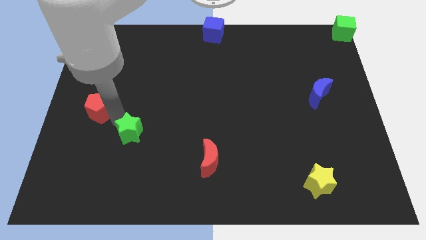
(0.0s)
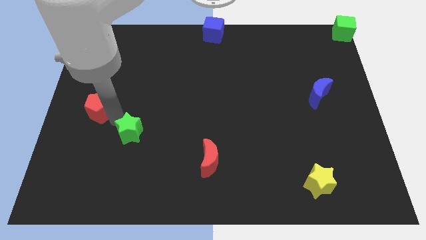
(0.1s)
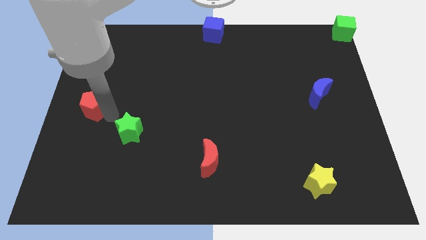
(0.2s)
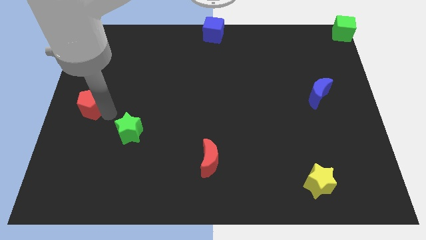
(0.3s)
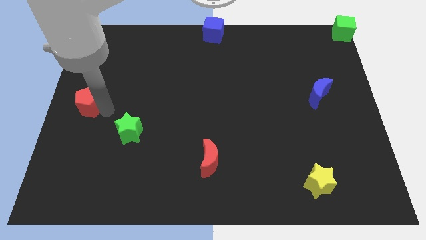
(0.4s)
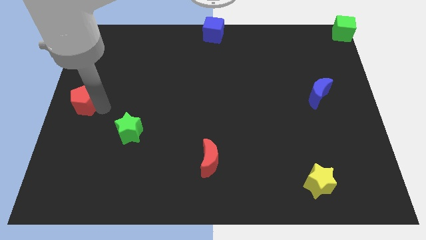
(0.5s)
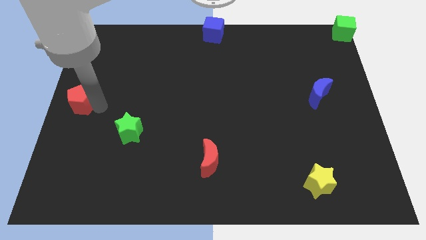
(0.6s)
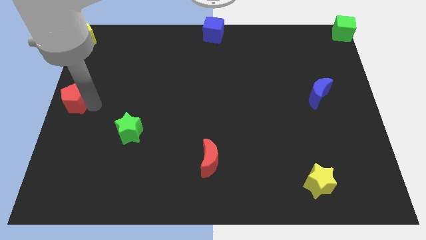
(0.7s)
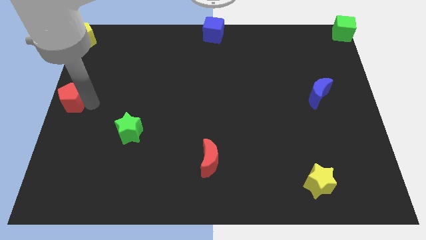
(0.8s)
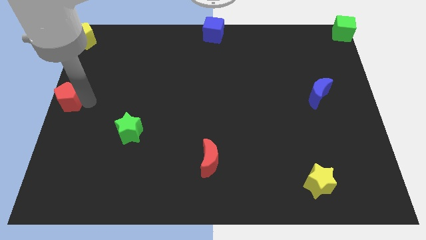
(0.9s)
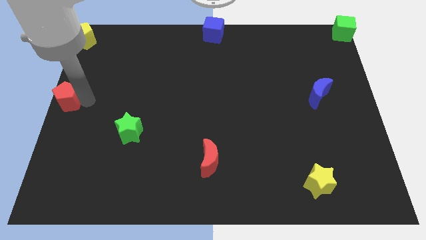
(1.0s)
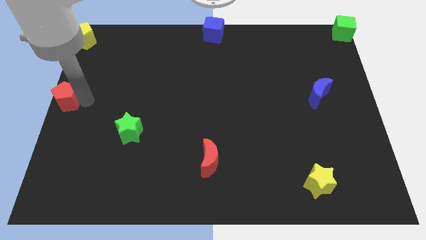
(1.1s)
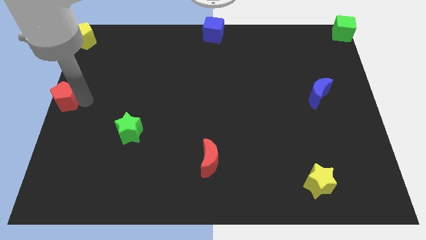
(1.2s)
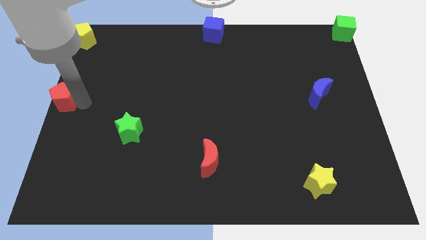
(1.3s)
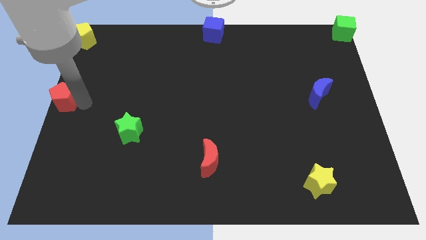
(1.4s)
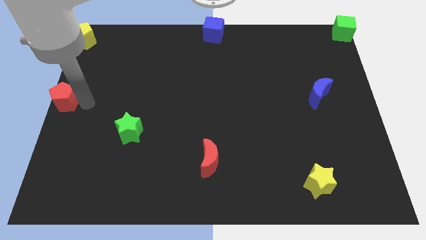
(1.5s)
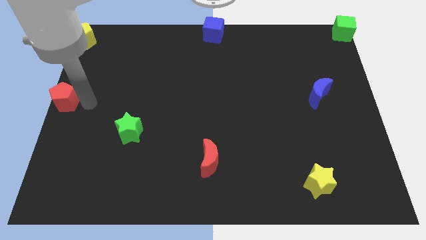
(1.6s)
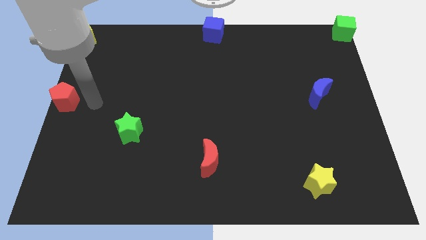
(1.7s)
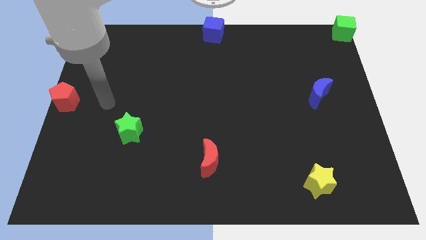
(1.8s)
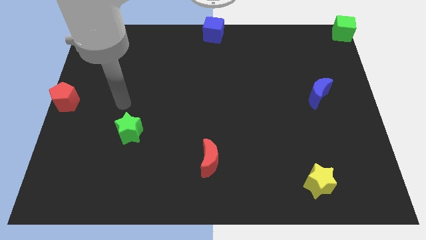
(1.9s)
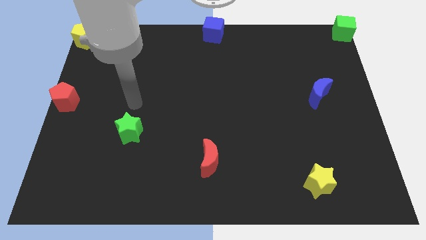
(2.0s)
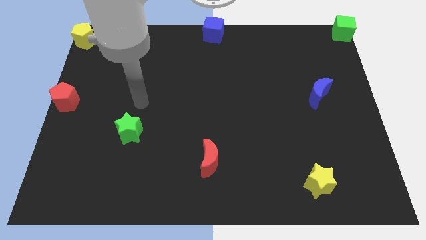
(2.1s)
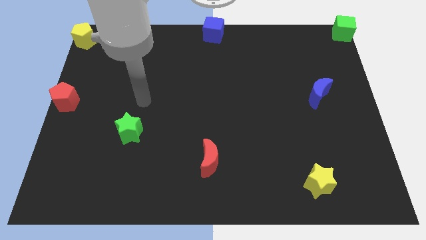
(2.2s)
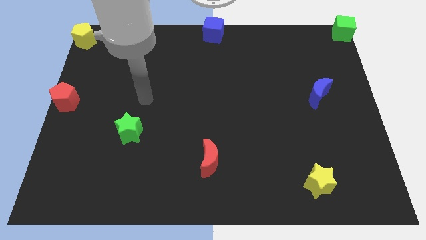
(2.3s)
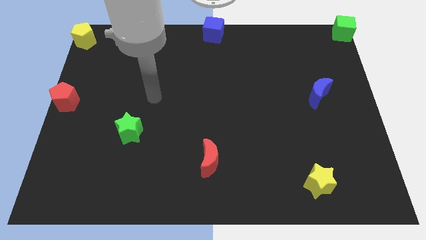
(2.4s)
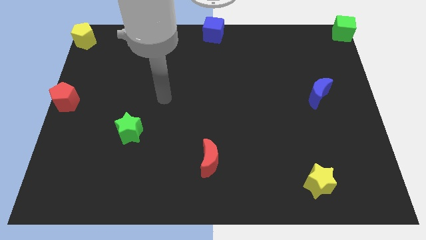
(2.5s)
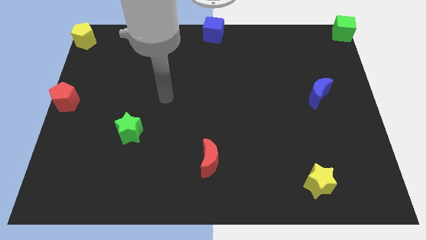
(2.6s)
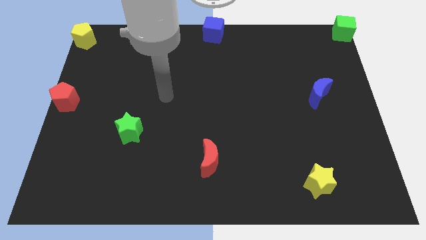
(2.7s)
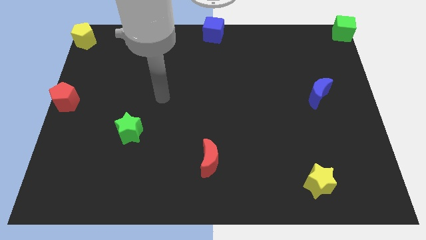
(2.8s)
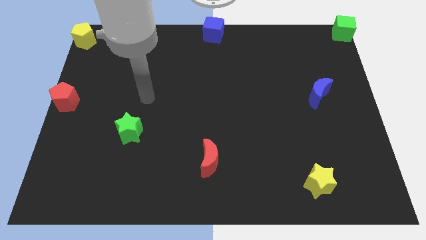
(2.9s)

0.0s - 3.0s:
push the red pentagon at the center left of the board

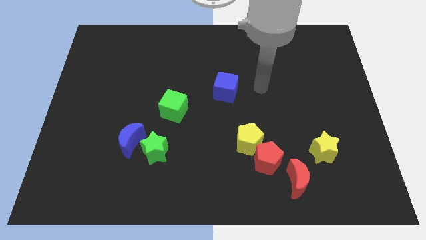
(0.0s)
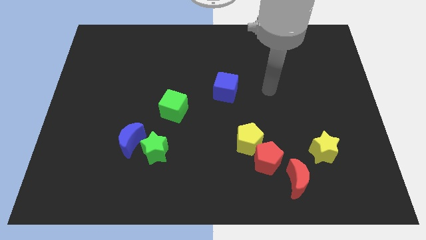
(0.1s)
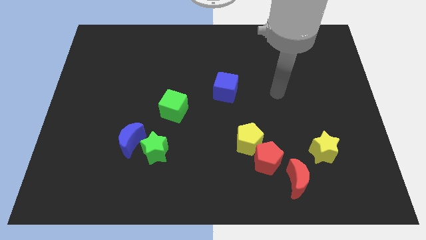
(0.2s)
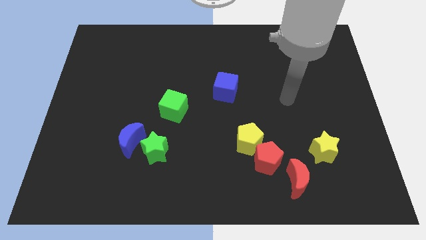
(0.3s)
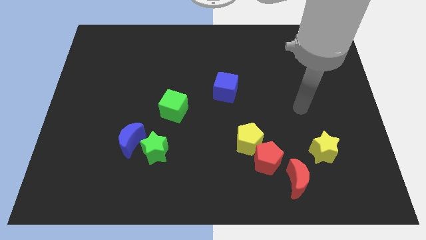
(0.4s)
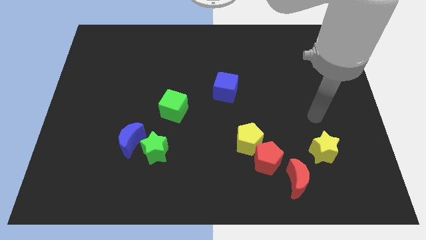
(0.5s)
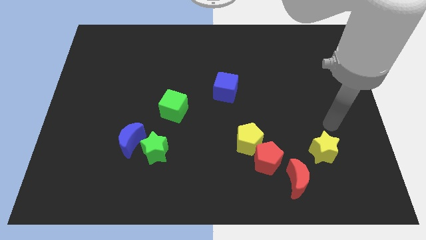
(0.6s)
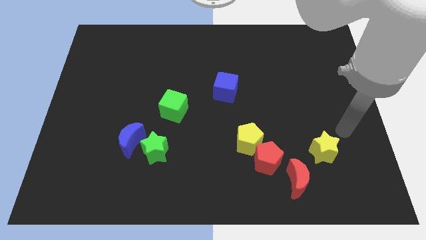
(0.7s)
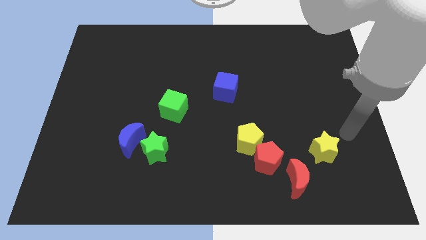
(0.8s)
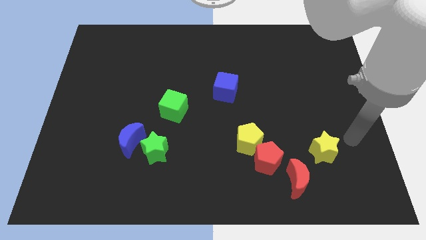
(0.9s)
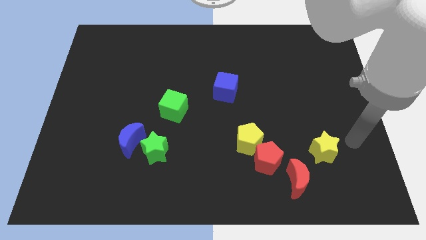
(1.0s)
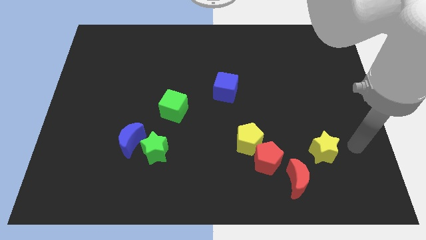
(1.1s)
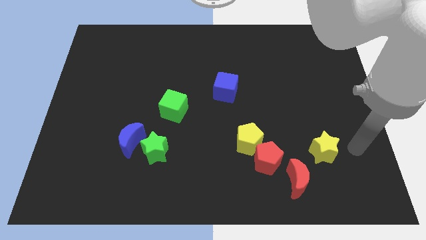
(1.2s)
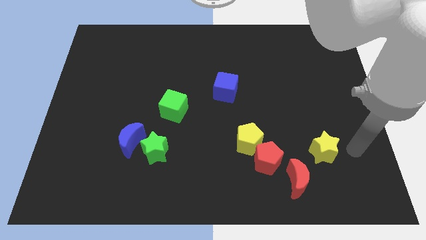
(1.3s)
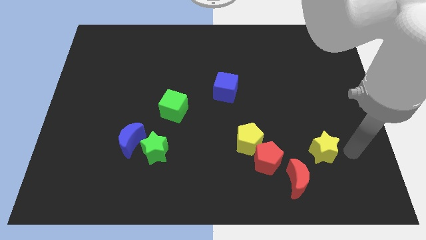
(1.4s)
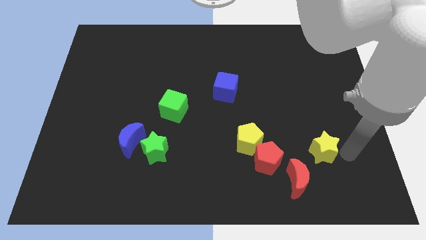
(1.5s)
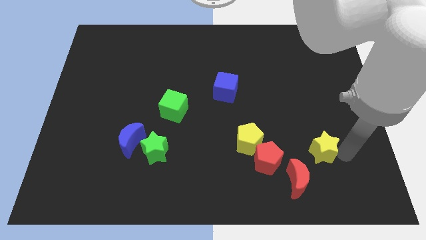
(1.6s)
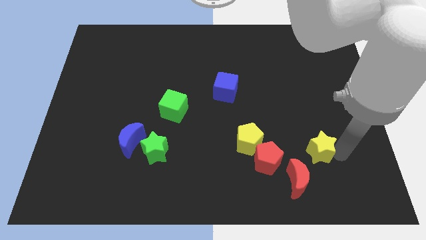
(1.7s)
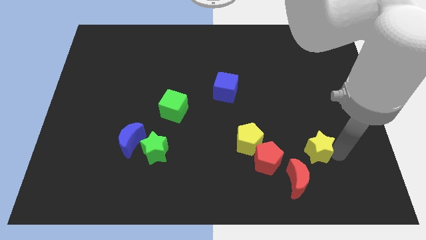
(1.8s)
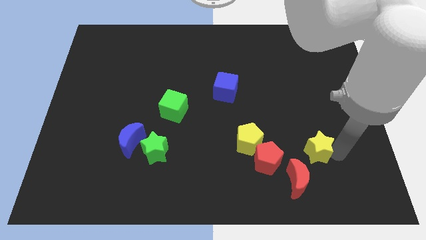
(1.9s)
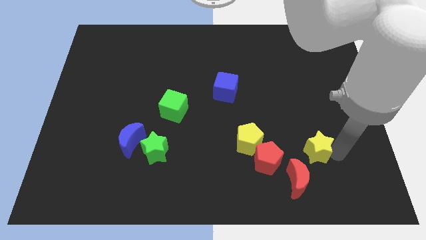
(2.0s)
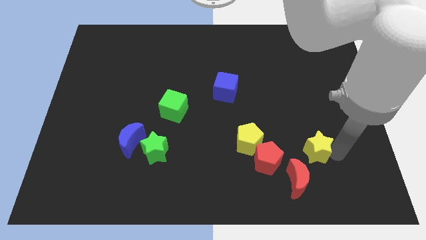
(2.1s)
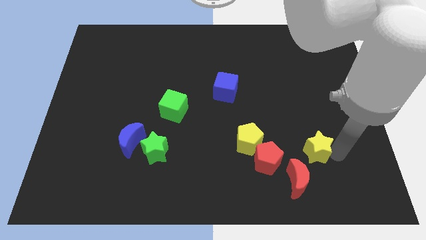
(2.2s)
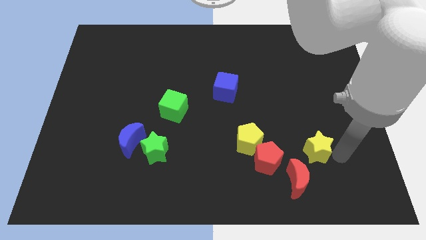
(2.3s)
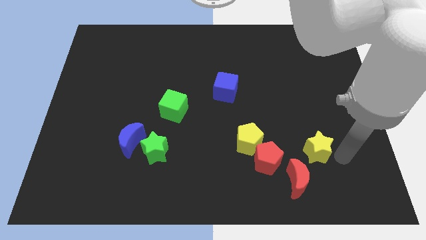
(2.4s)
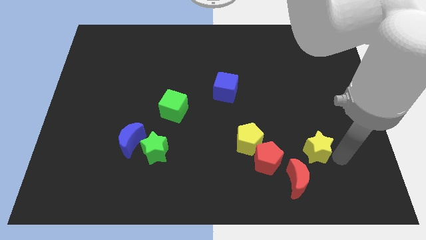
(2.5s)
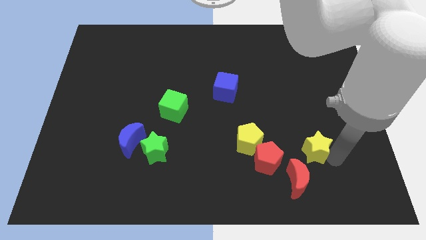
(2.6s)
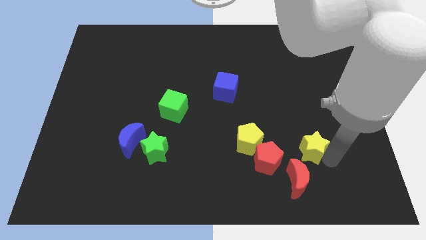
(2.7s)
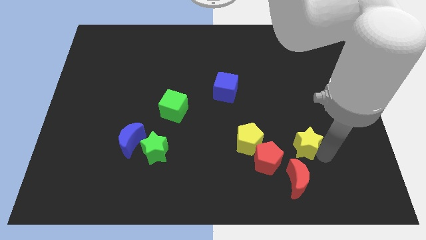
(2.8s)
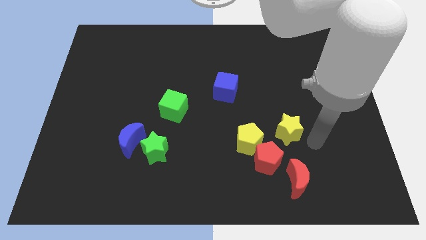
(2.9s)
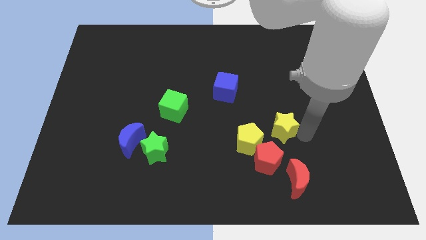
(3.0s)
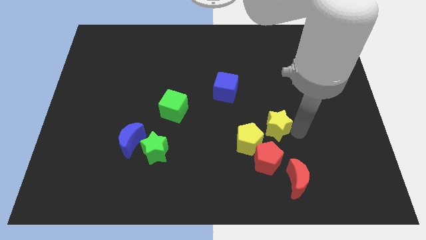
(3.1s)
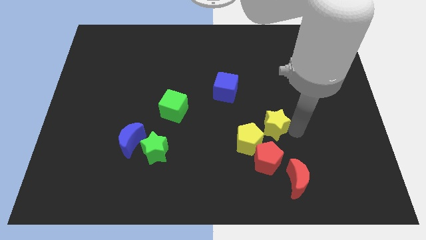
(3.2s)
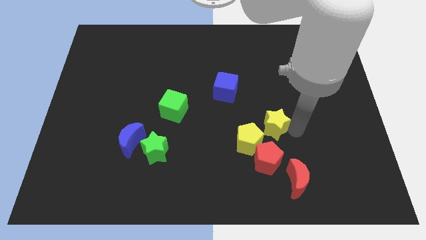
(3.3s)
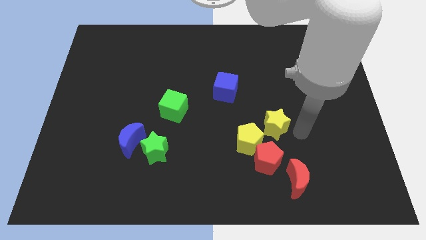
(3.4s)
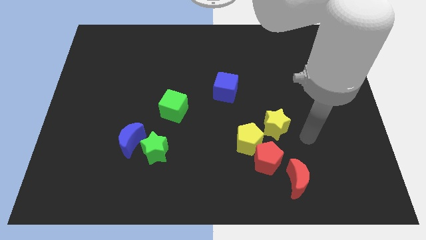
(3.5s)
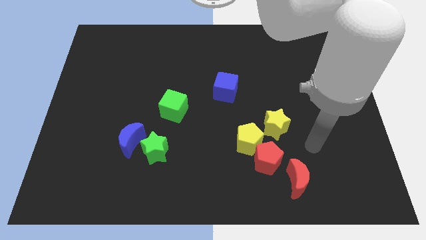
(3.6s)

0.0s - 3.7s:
push yellow star to the top of red pentagon

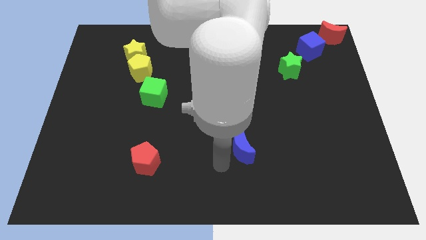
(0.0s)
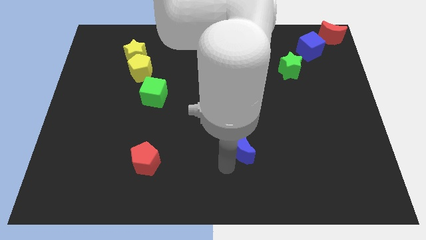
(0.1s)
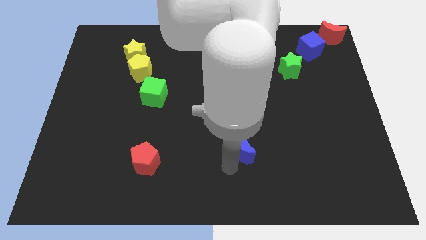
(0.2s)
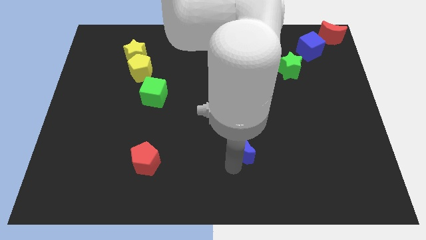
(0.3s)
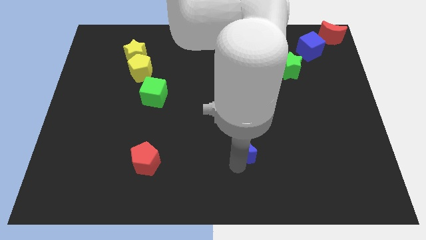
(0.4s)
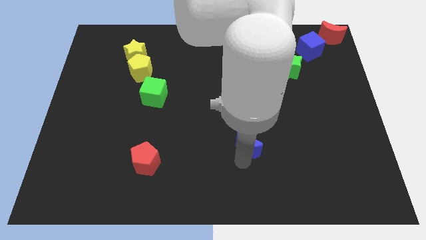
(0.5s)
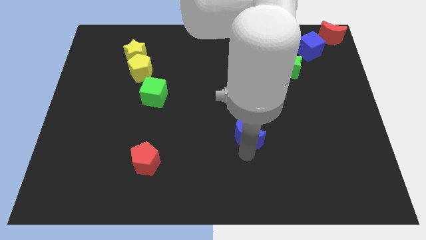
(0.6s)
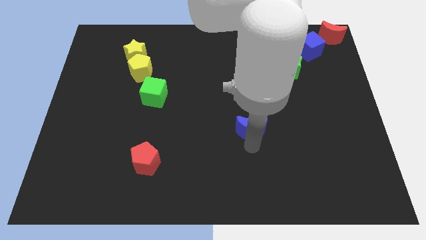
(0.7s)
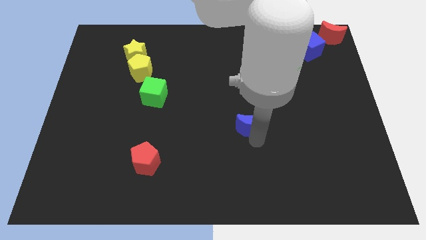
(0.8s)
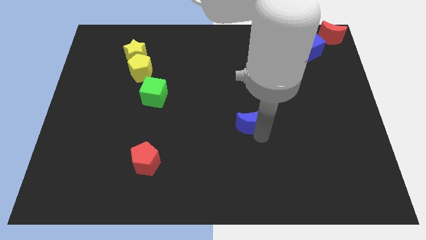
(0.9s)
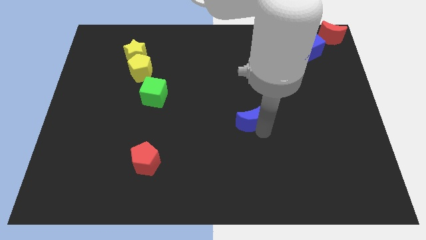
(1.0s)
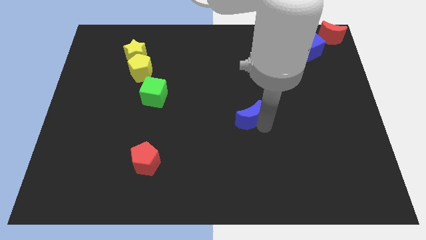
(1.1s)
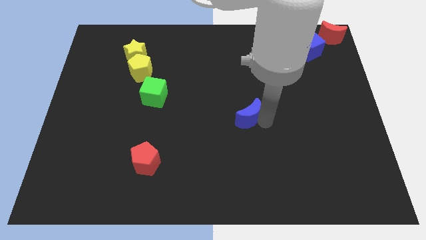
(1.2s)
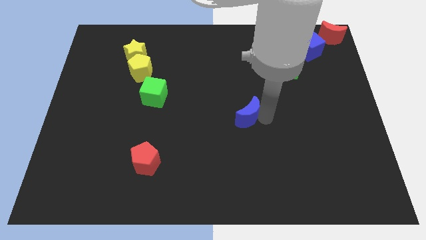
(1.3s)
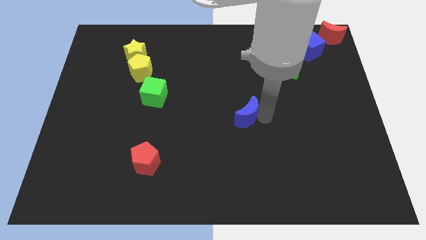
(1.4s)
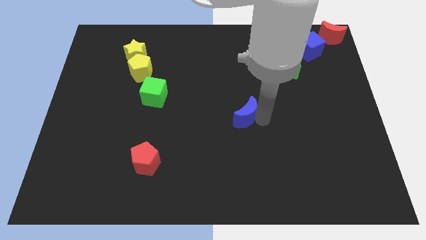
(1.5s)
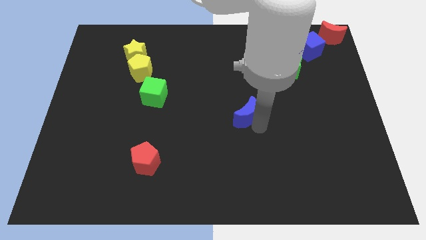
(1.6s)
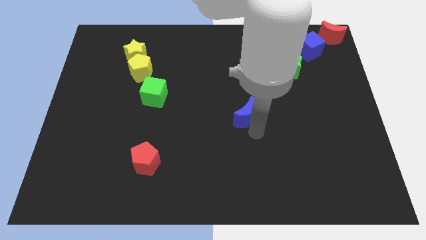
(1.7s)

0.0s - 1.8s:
push the blue crescent towards the center of the board

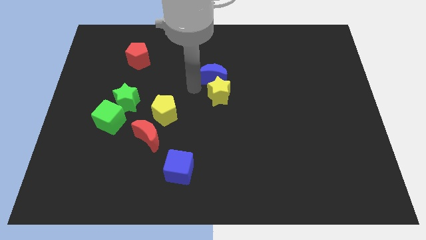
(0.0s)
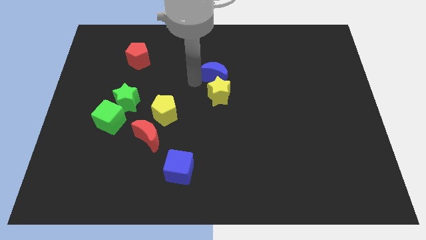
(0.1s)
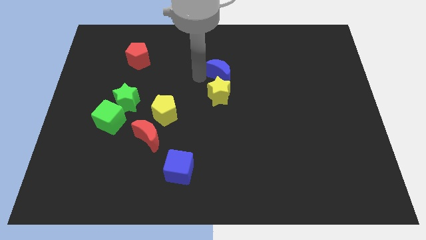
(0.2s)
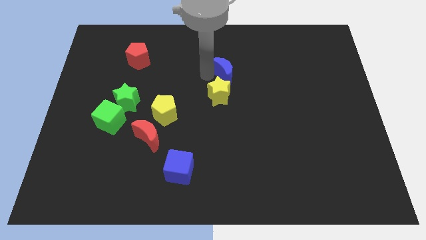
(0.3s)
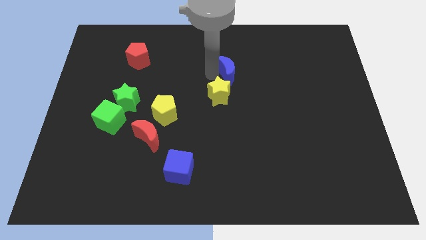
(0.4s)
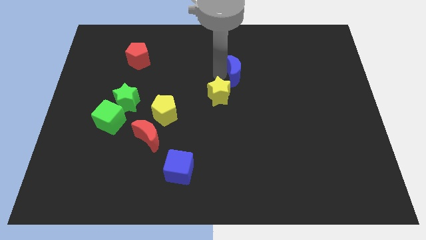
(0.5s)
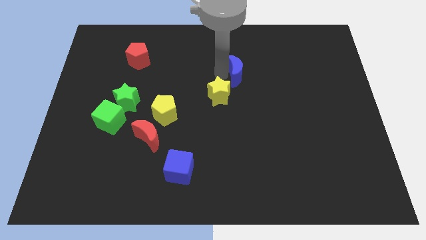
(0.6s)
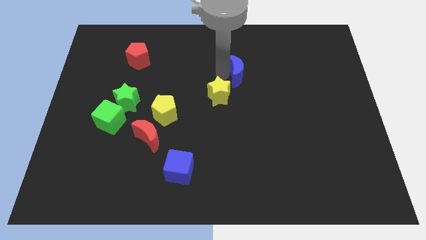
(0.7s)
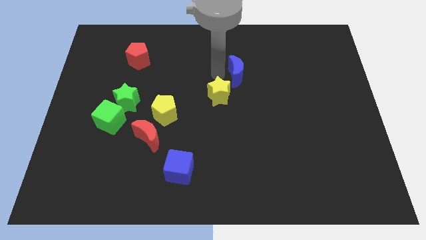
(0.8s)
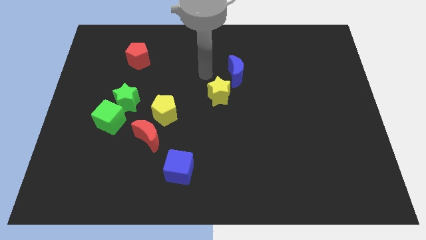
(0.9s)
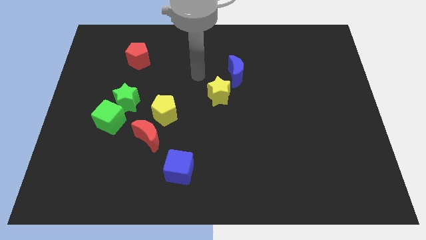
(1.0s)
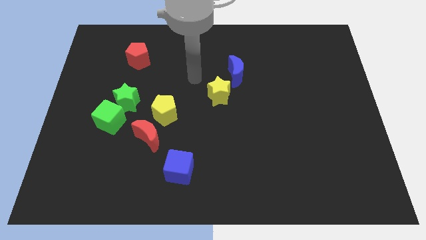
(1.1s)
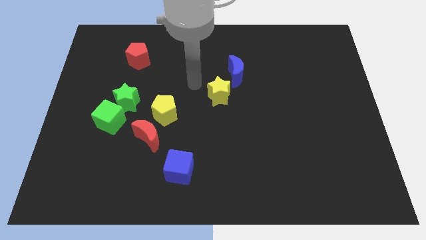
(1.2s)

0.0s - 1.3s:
move blue moon top right to yellow star
